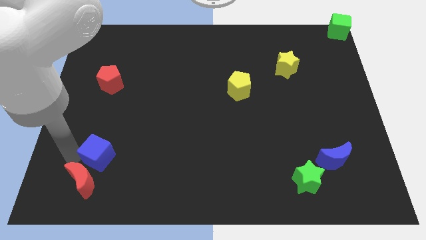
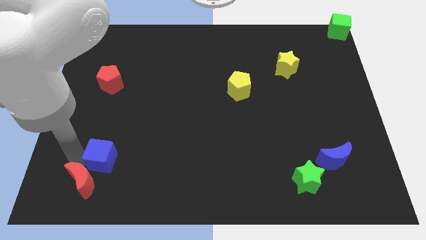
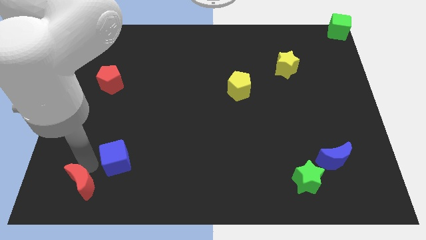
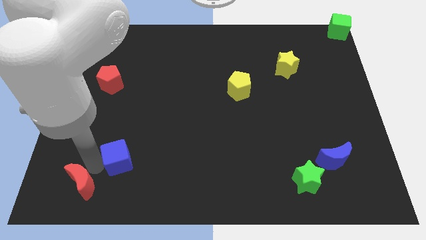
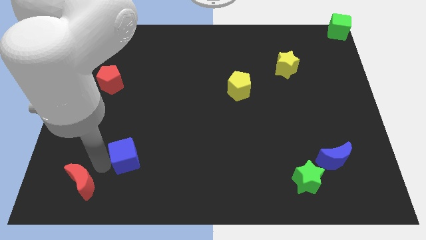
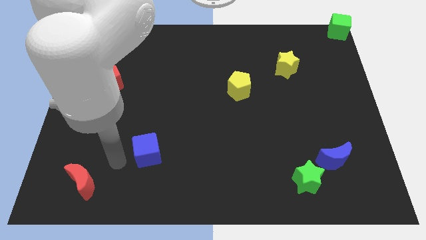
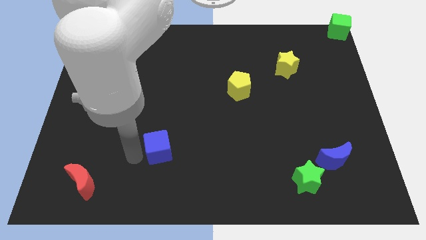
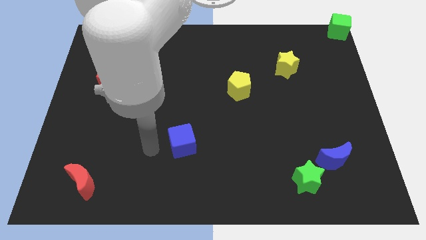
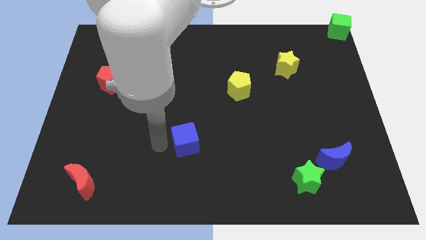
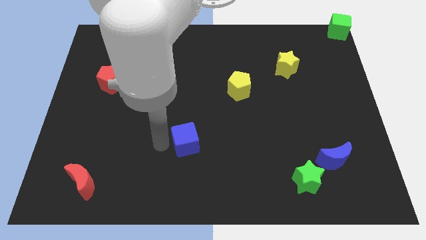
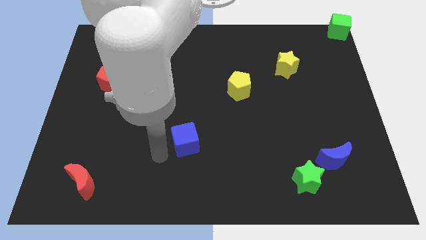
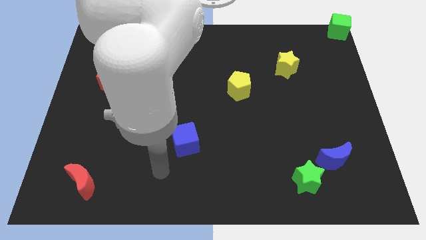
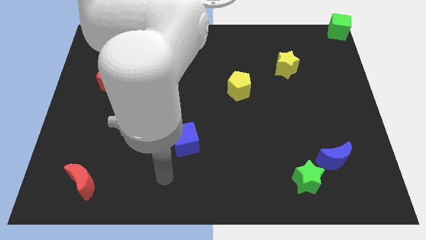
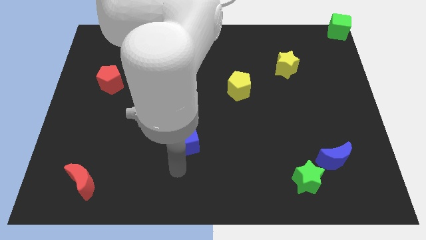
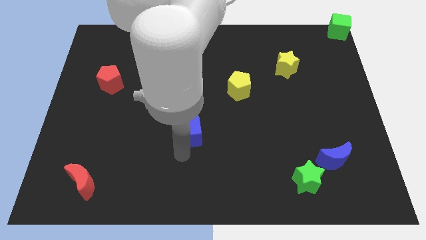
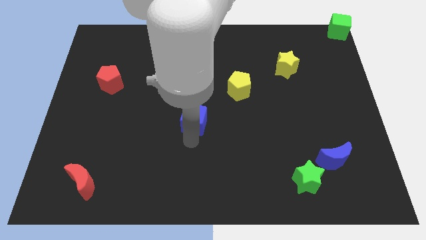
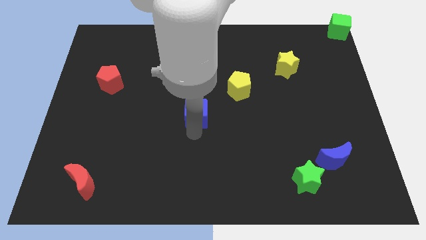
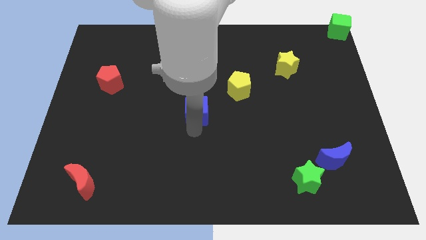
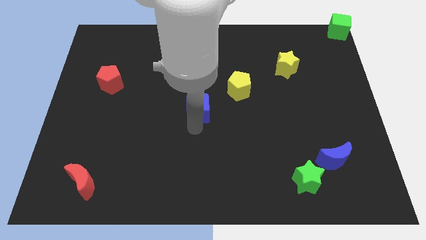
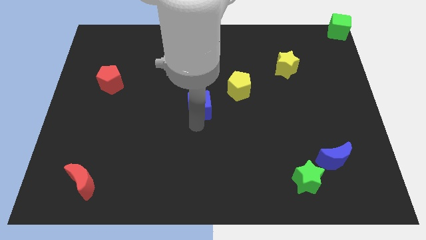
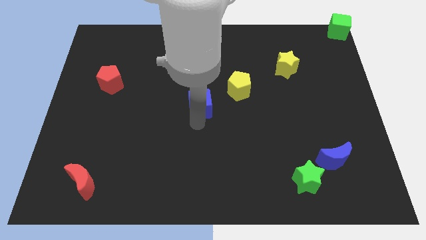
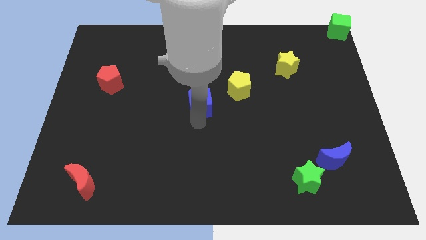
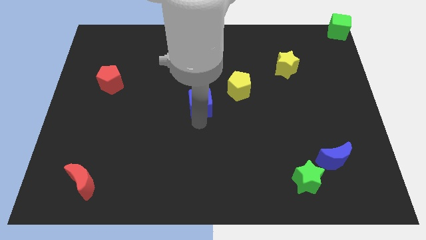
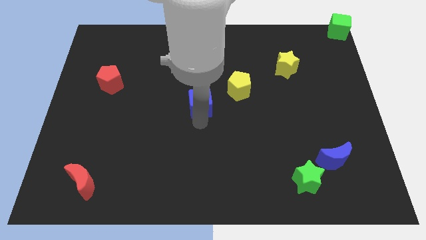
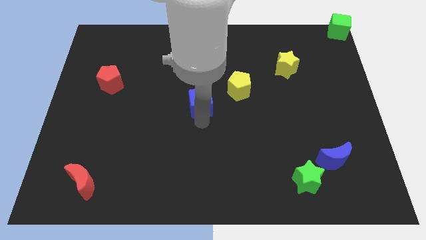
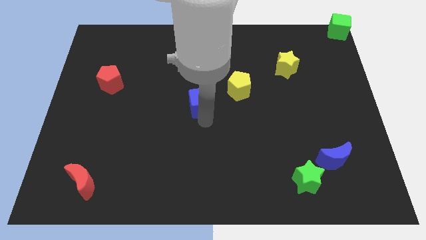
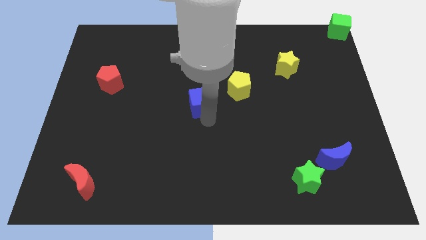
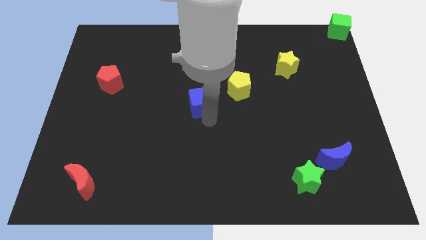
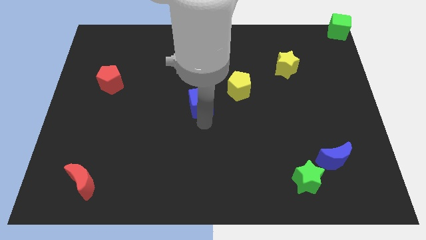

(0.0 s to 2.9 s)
move the blue cube to the left of the yellow pentagon

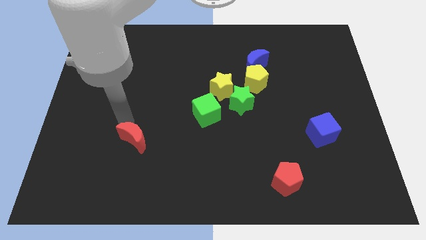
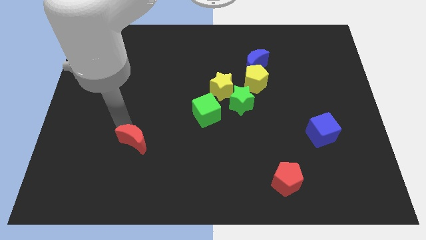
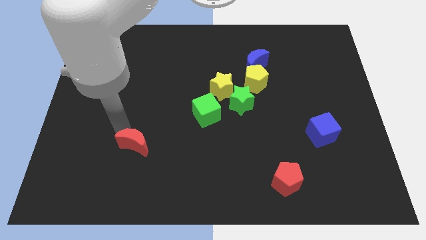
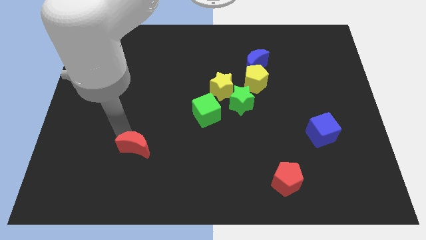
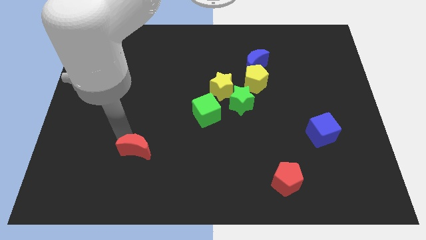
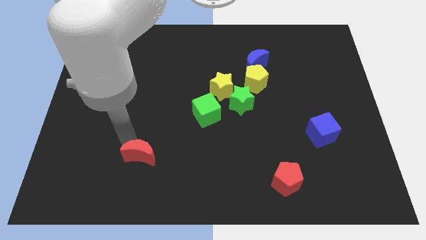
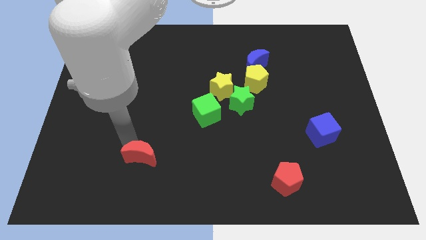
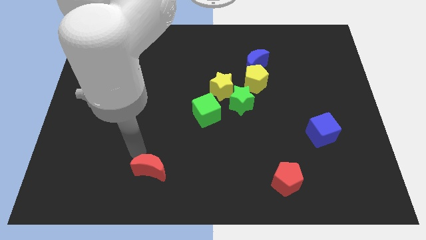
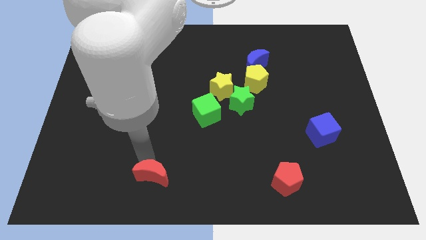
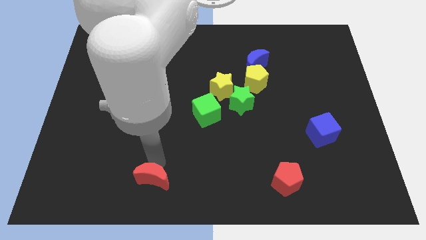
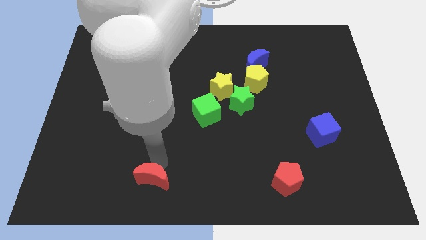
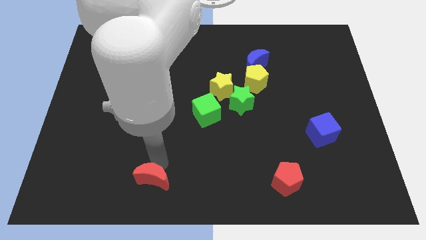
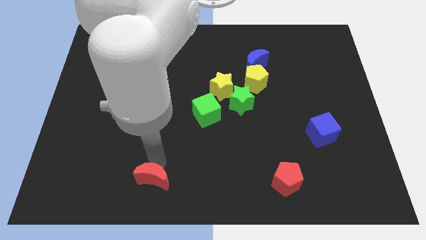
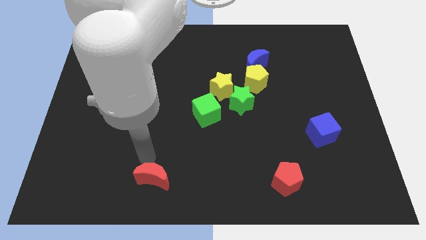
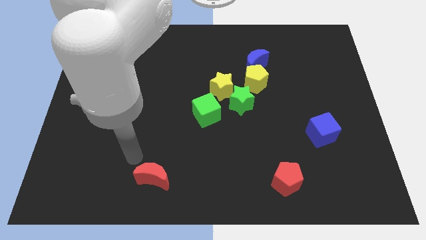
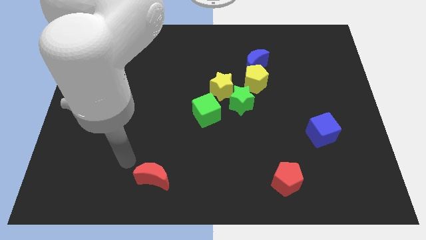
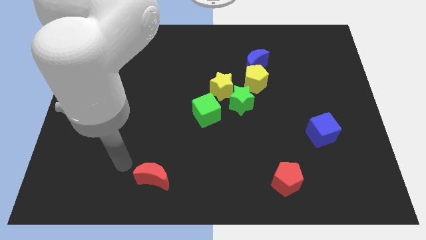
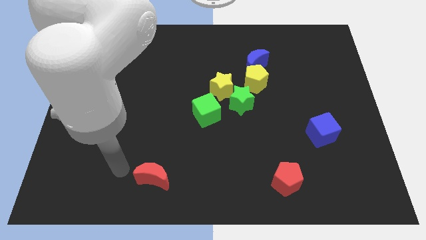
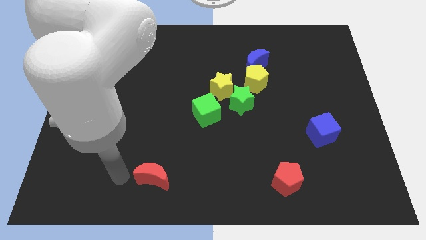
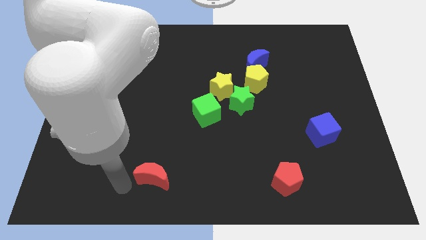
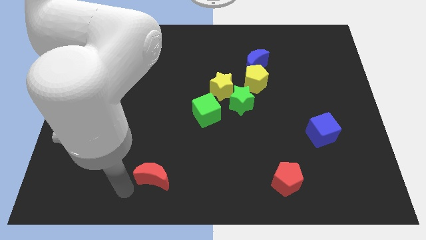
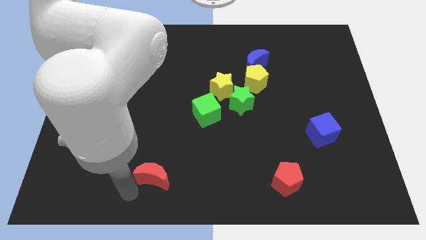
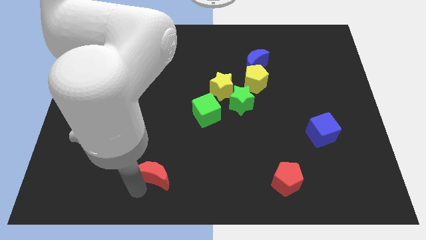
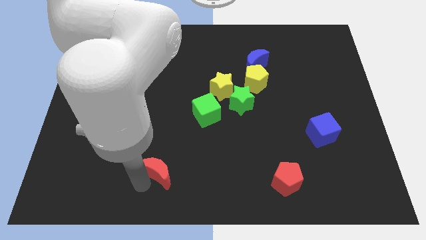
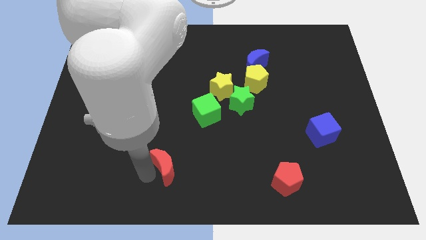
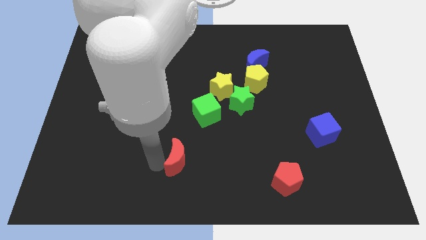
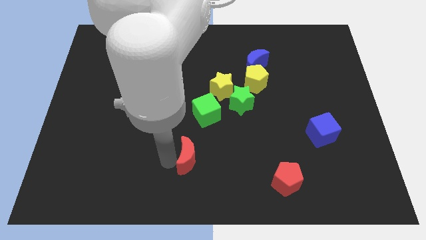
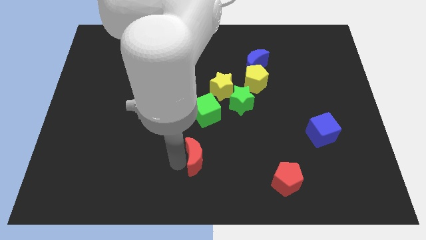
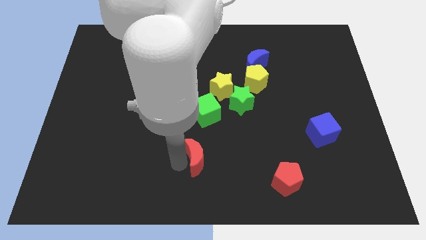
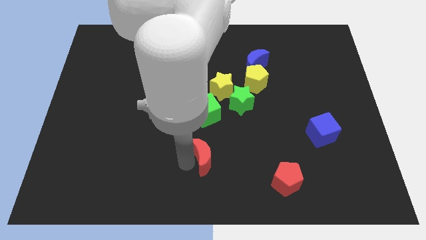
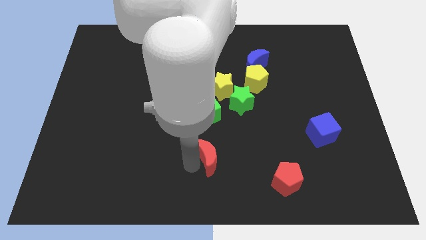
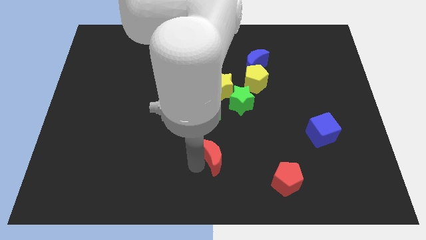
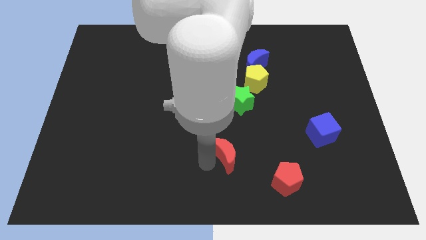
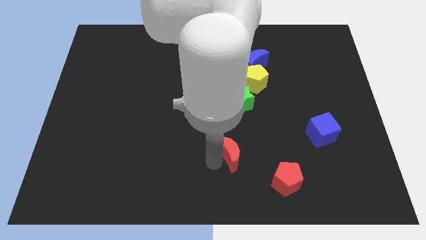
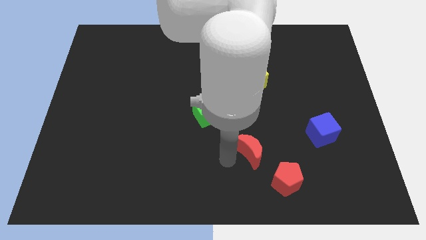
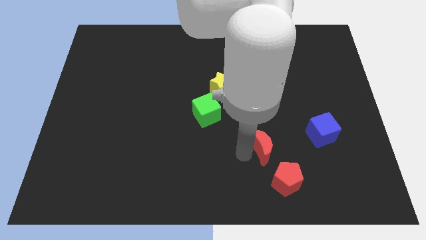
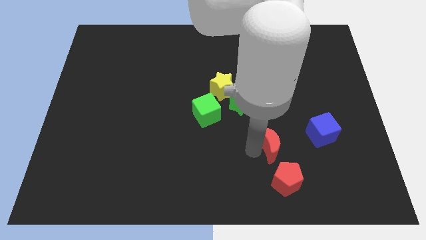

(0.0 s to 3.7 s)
place the red moon below the green star

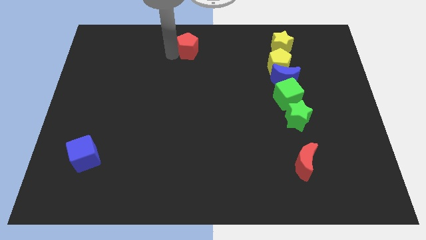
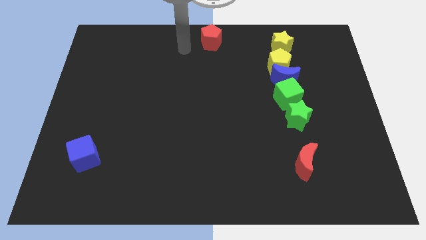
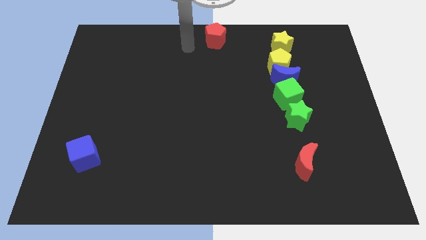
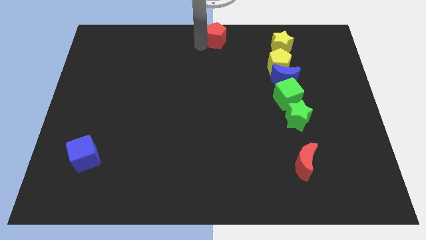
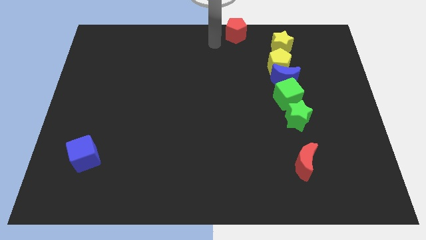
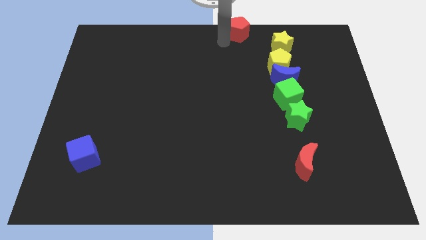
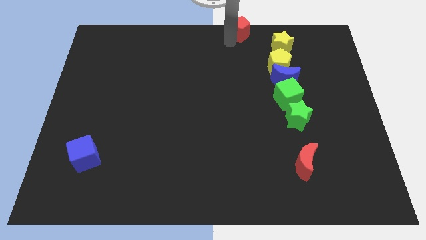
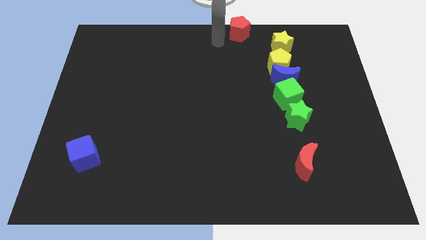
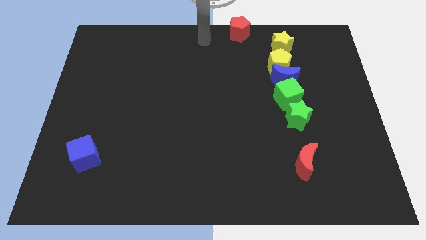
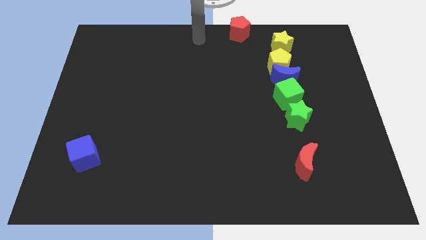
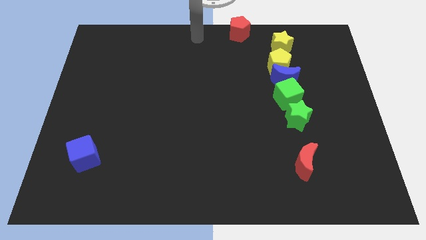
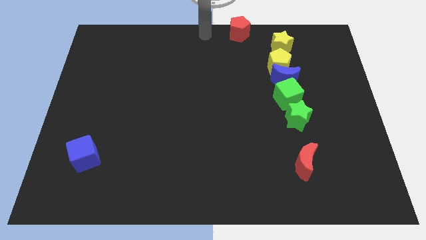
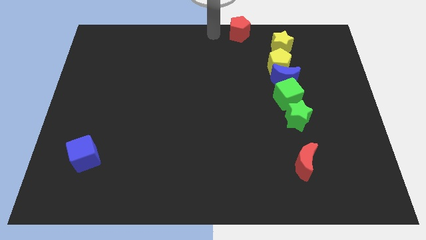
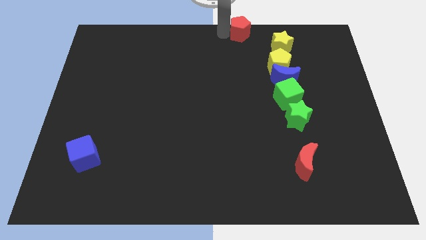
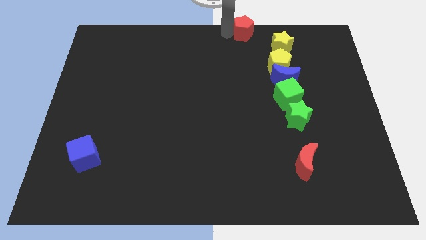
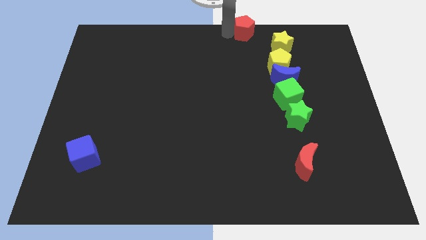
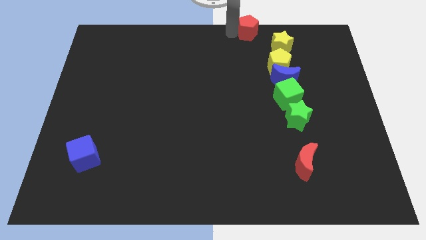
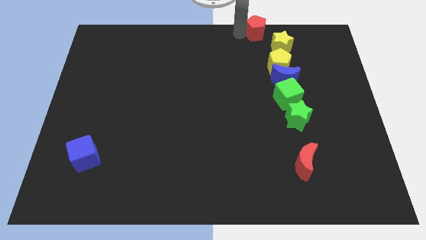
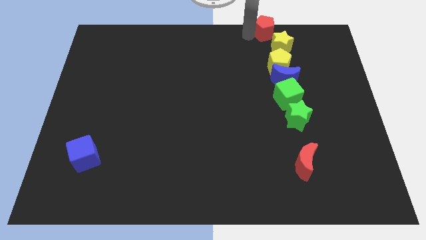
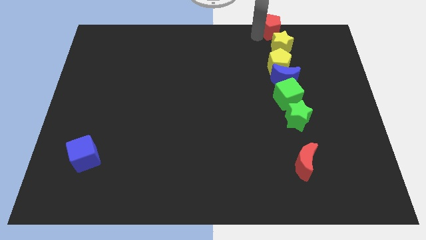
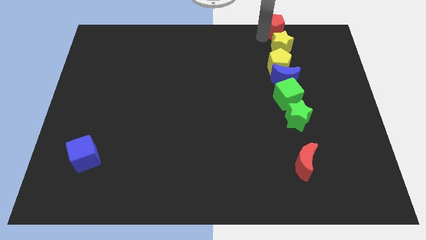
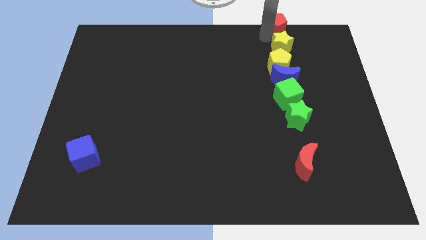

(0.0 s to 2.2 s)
move the red pentagon above the yellow star
